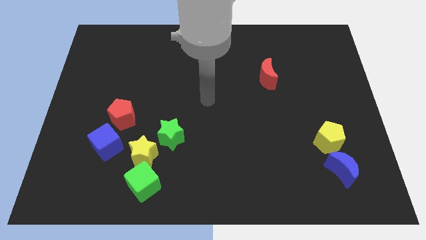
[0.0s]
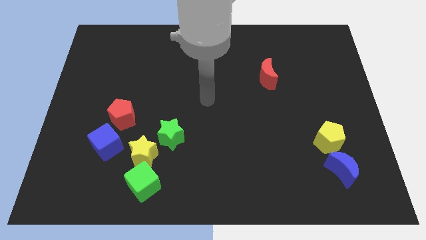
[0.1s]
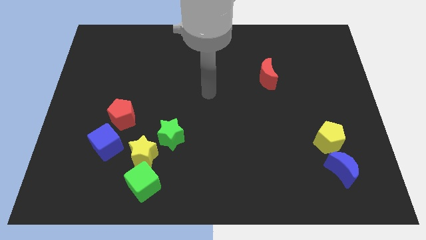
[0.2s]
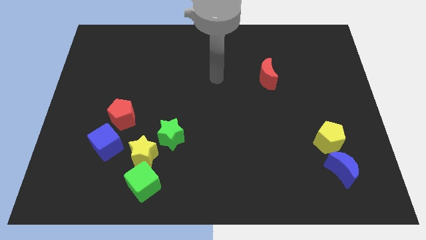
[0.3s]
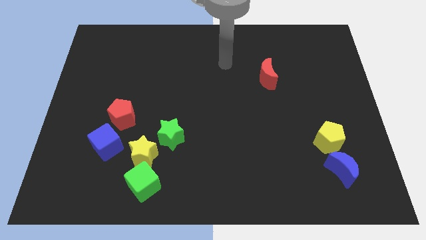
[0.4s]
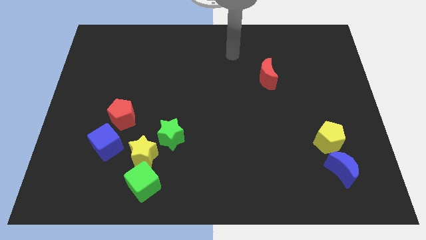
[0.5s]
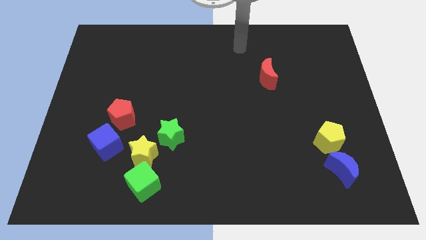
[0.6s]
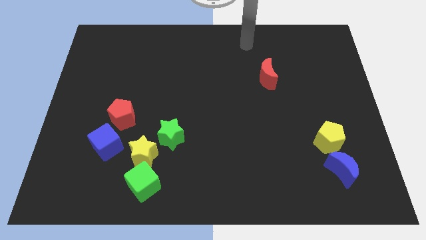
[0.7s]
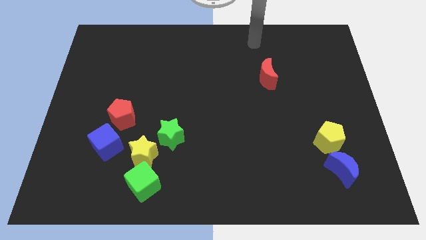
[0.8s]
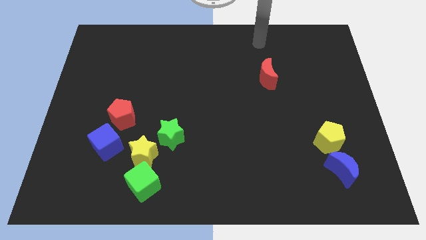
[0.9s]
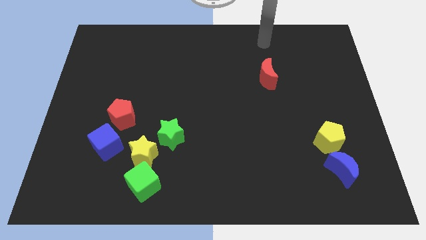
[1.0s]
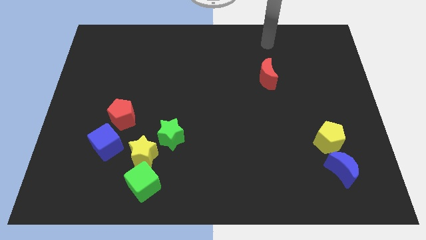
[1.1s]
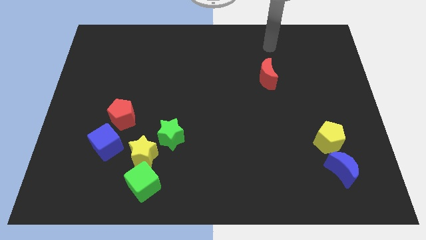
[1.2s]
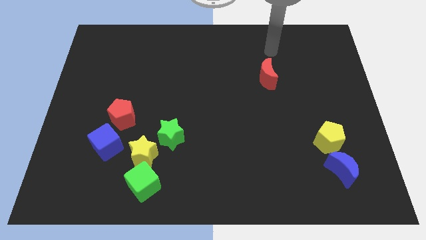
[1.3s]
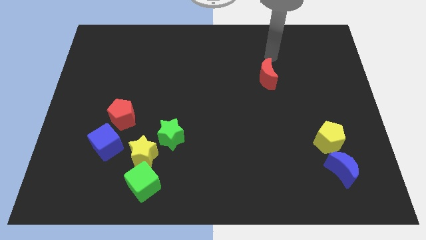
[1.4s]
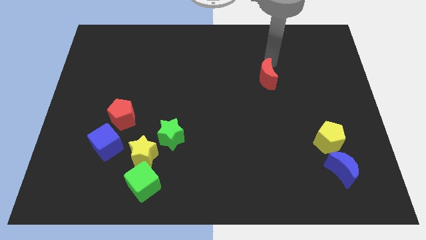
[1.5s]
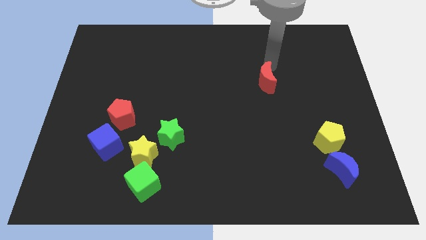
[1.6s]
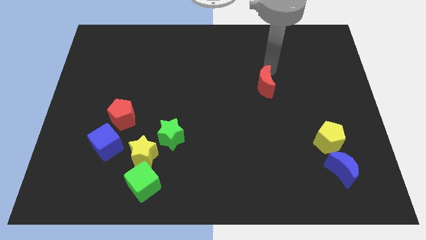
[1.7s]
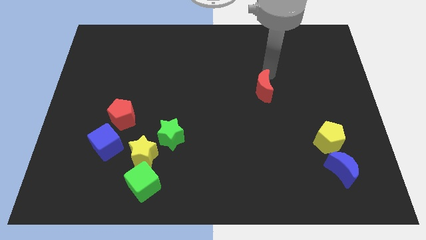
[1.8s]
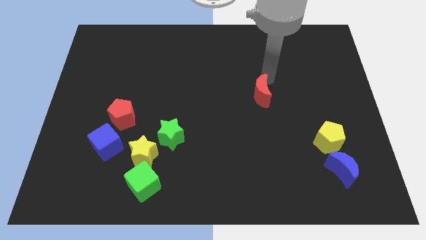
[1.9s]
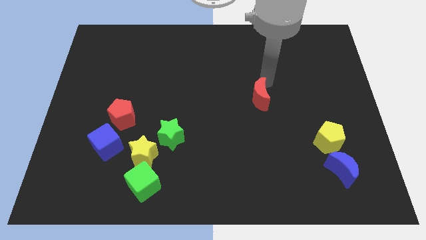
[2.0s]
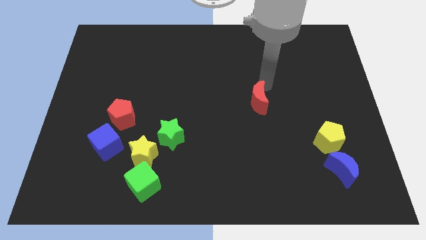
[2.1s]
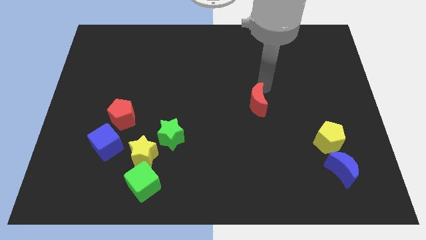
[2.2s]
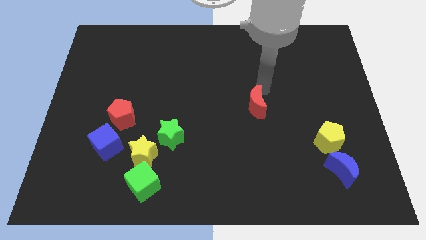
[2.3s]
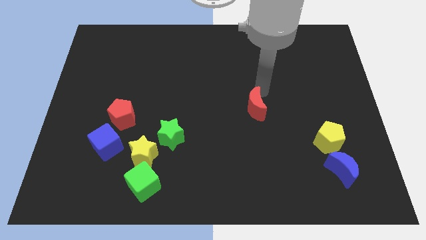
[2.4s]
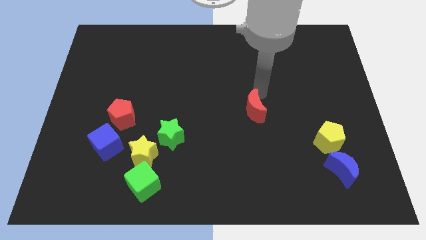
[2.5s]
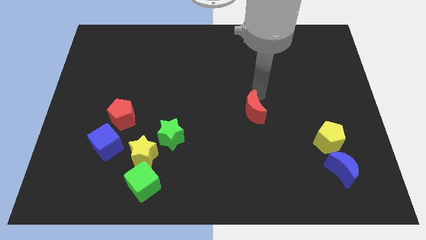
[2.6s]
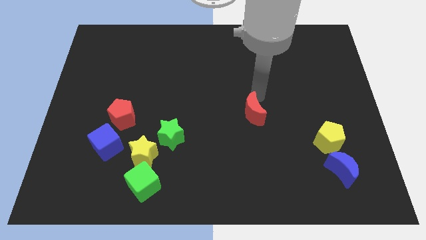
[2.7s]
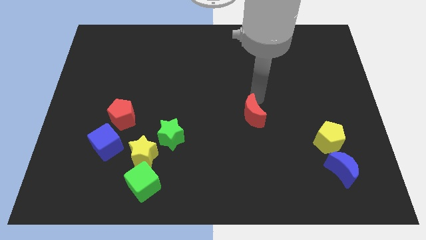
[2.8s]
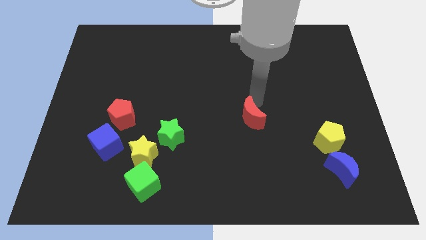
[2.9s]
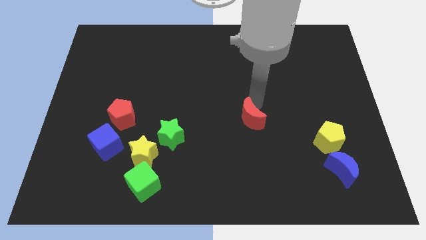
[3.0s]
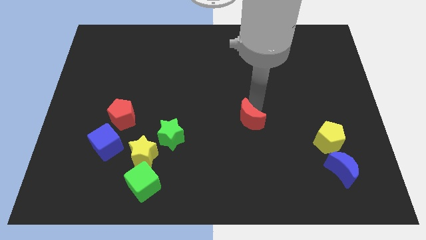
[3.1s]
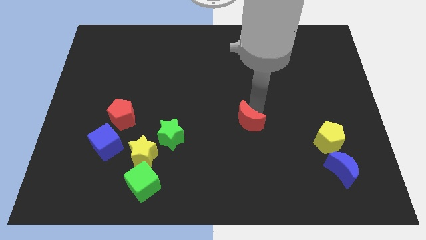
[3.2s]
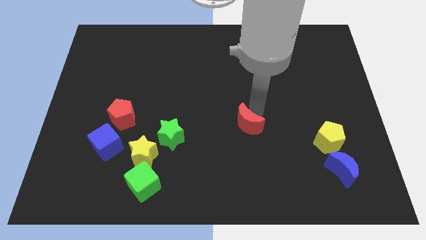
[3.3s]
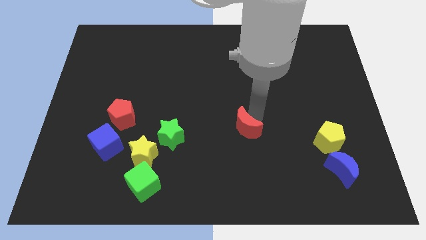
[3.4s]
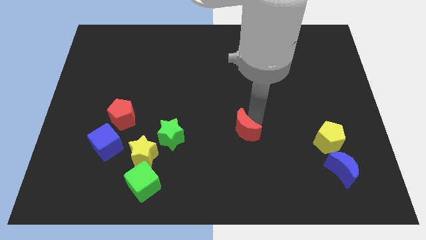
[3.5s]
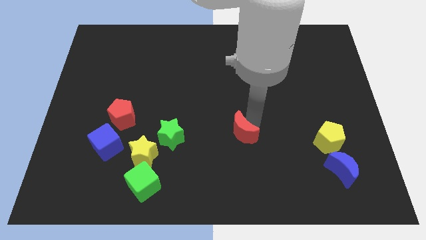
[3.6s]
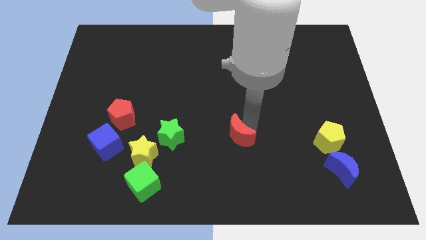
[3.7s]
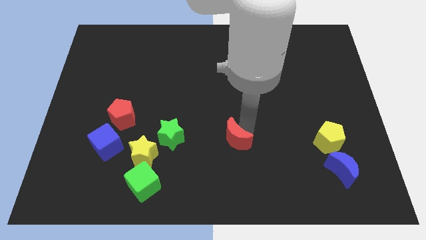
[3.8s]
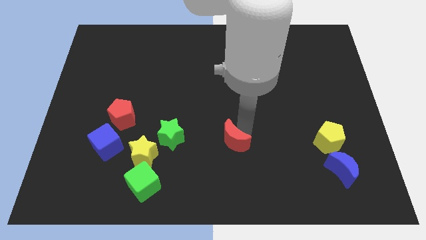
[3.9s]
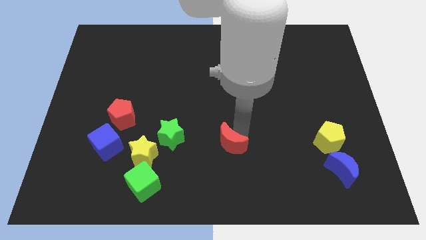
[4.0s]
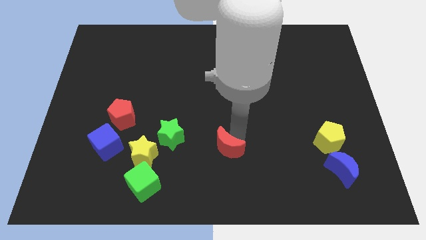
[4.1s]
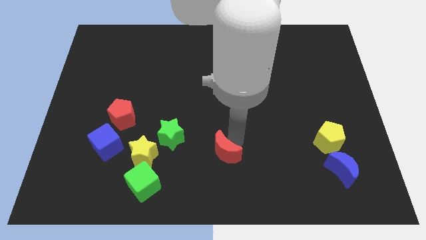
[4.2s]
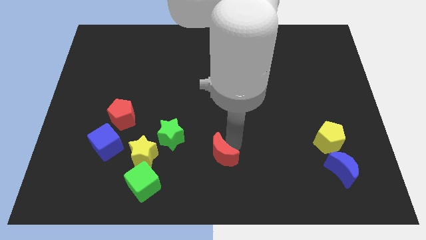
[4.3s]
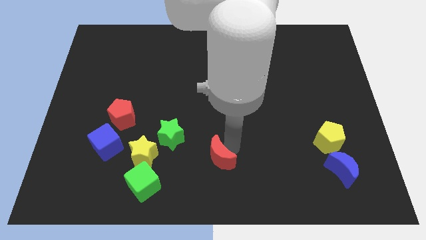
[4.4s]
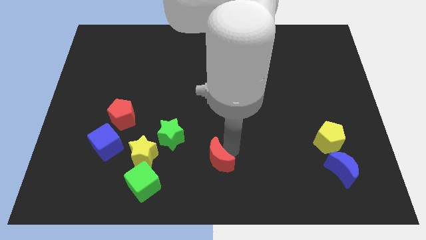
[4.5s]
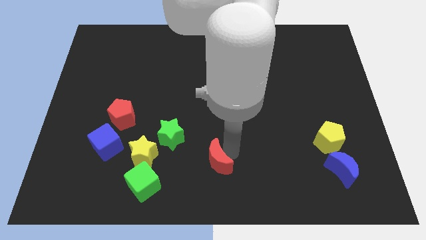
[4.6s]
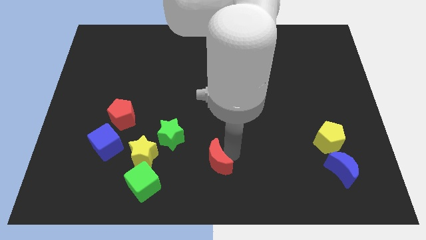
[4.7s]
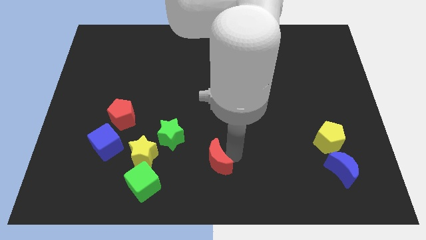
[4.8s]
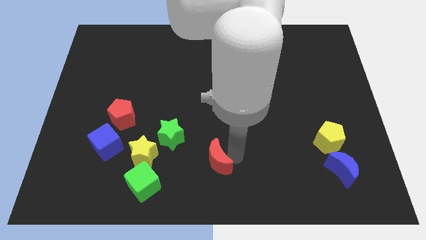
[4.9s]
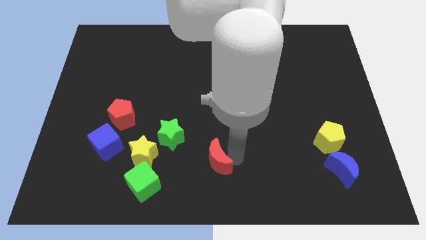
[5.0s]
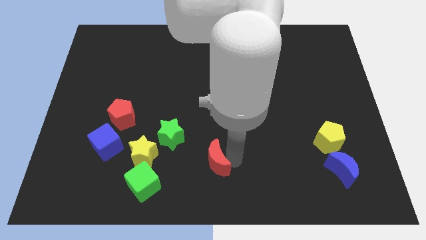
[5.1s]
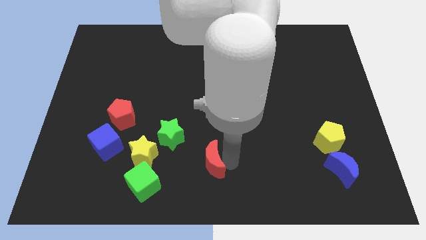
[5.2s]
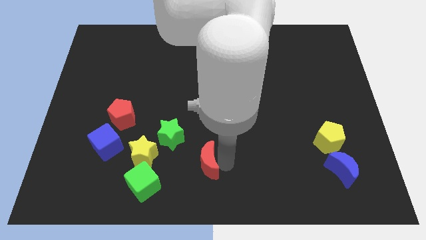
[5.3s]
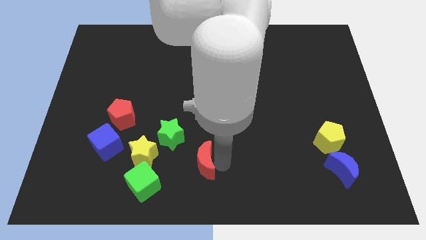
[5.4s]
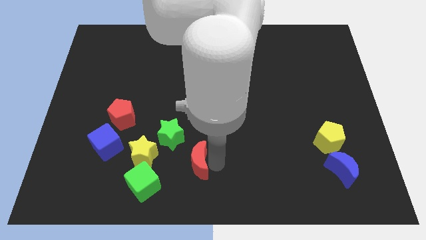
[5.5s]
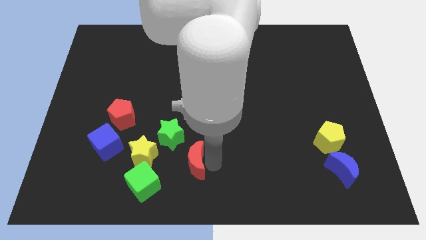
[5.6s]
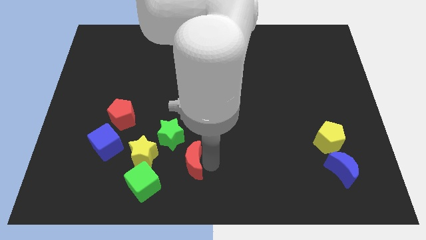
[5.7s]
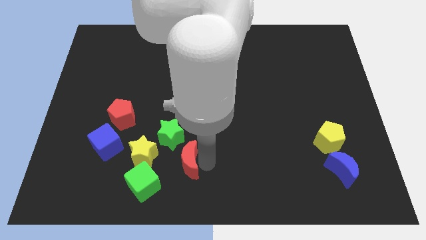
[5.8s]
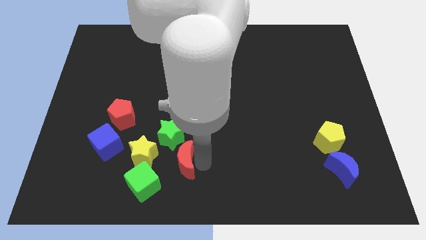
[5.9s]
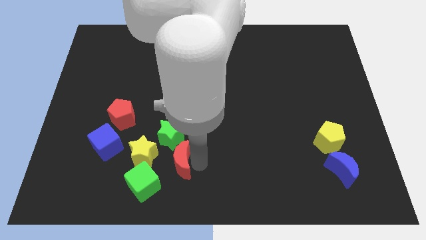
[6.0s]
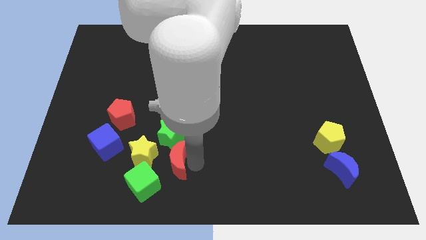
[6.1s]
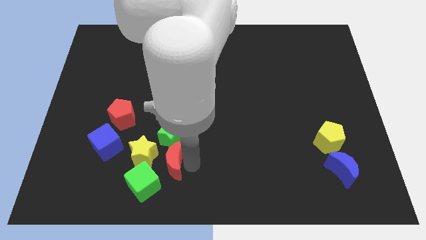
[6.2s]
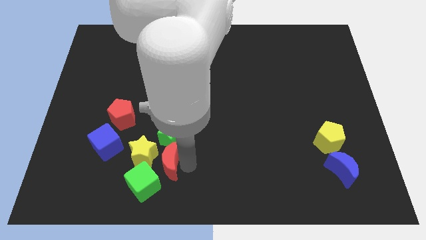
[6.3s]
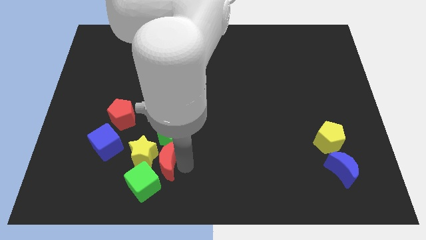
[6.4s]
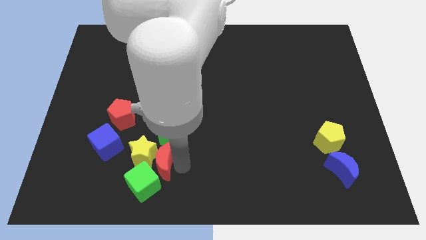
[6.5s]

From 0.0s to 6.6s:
move the red moon to the yellow star

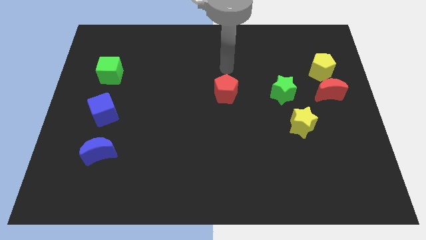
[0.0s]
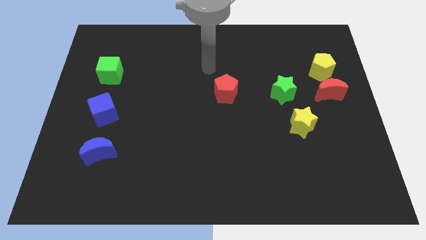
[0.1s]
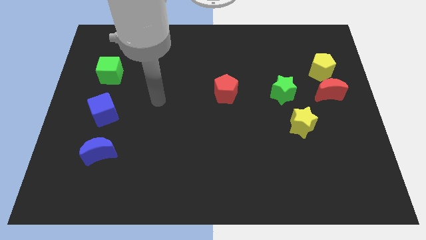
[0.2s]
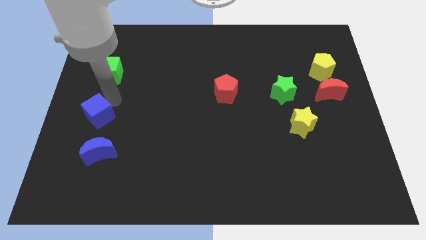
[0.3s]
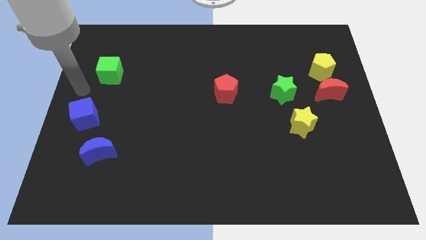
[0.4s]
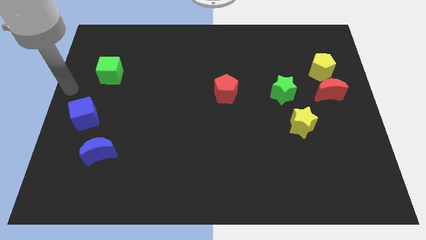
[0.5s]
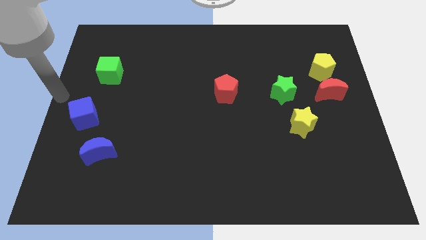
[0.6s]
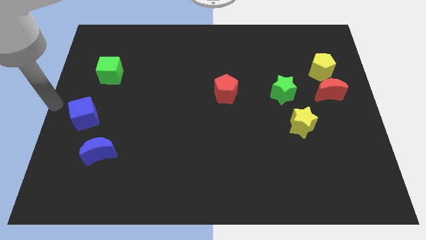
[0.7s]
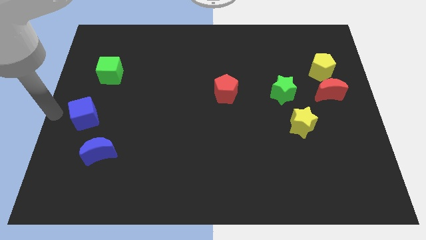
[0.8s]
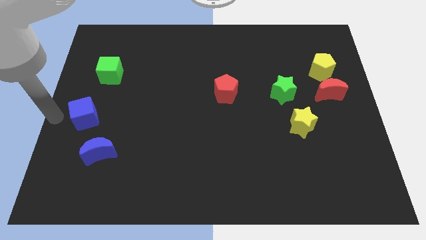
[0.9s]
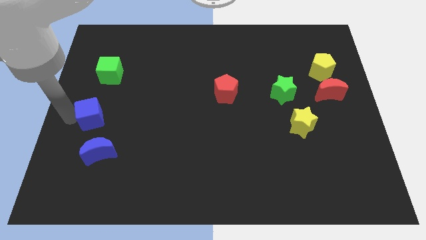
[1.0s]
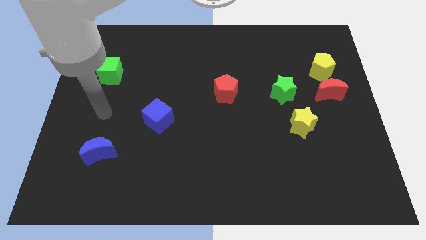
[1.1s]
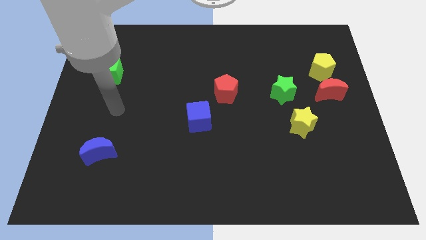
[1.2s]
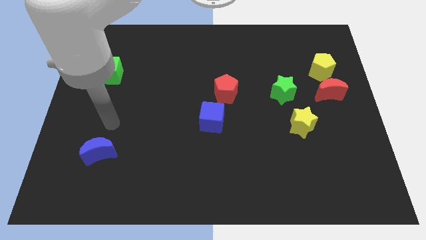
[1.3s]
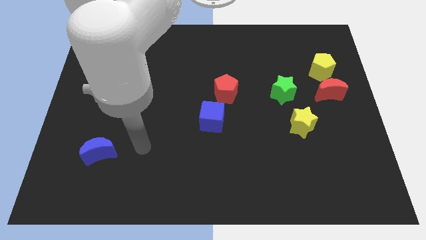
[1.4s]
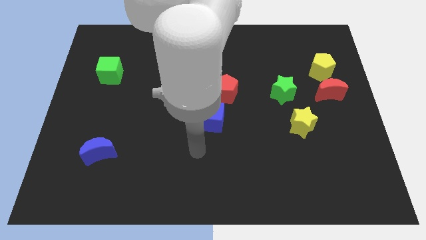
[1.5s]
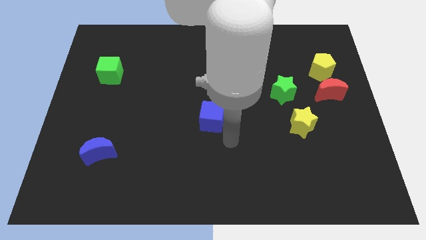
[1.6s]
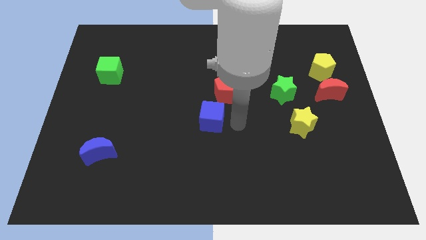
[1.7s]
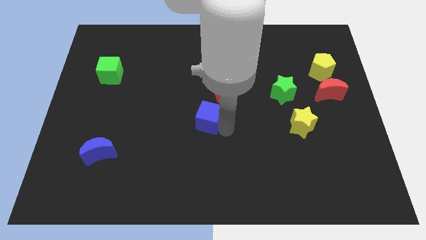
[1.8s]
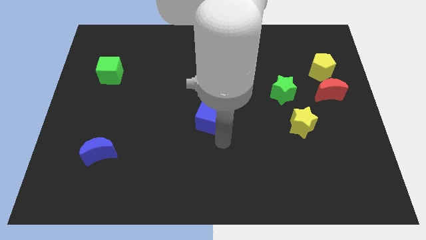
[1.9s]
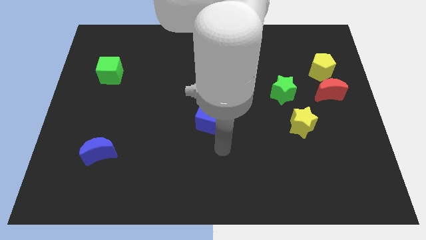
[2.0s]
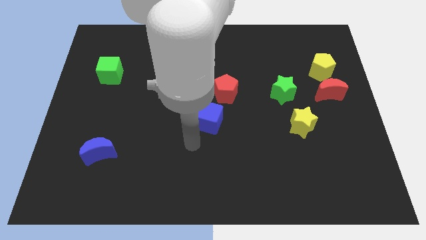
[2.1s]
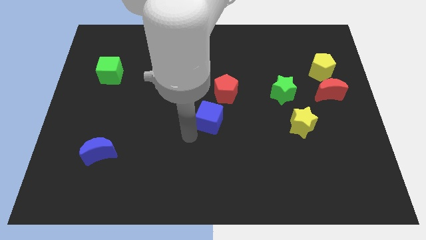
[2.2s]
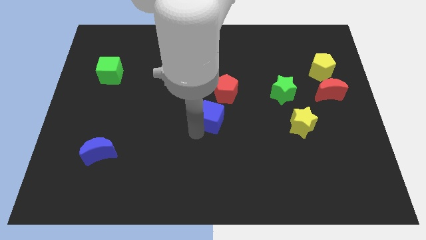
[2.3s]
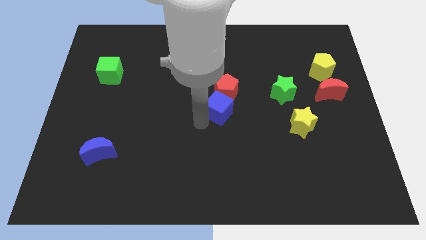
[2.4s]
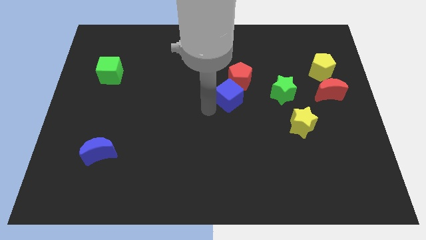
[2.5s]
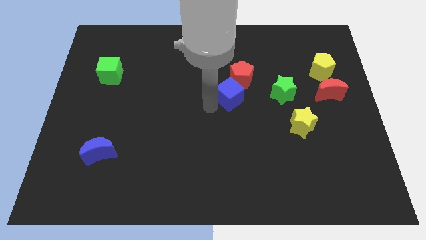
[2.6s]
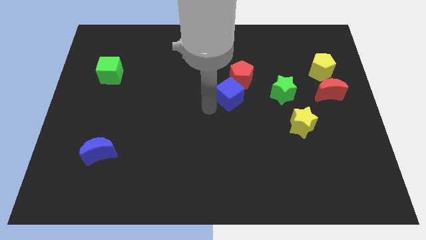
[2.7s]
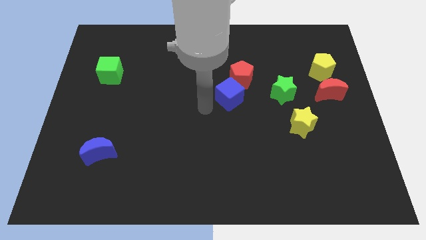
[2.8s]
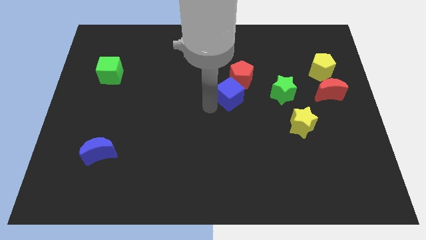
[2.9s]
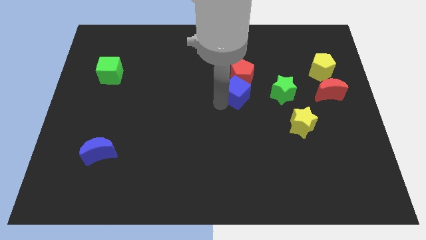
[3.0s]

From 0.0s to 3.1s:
slide the blue cube next to the red pentagon
